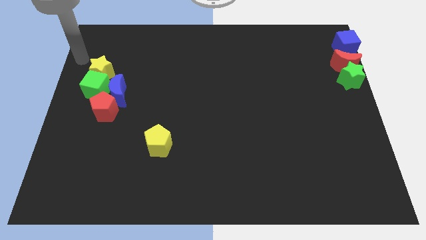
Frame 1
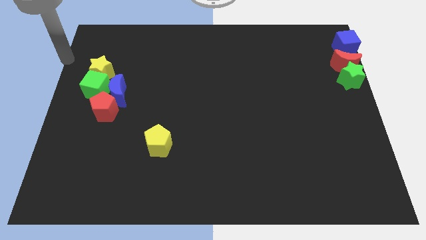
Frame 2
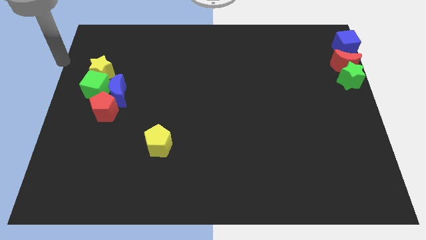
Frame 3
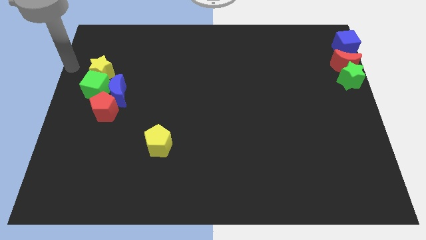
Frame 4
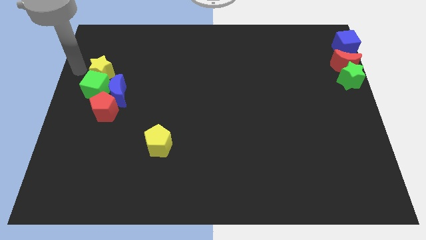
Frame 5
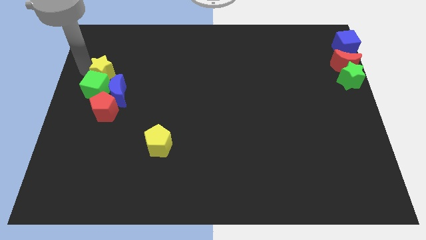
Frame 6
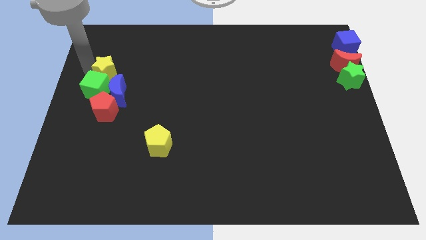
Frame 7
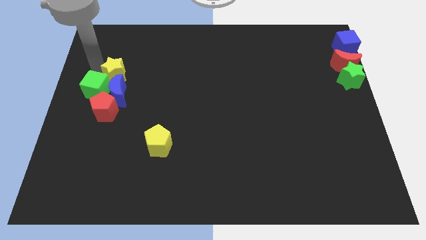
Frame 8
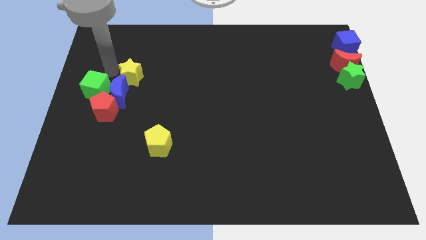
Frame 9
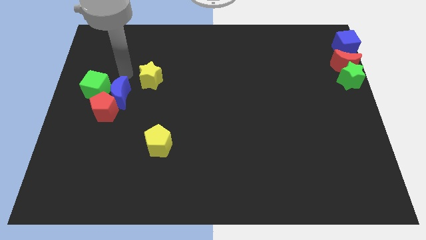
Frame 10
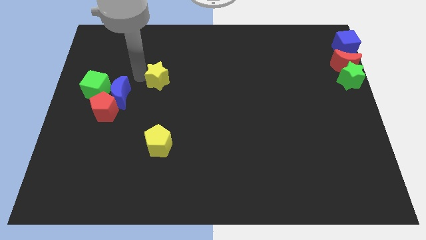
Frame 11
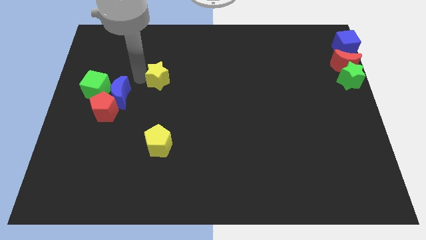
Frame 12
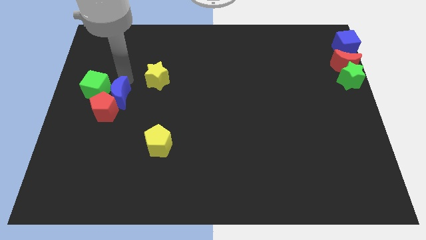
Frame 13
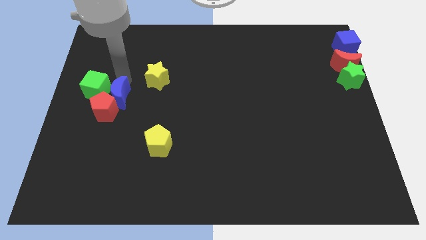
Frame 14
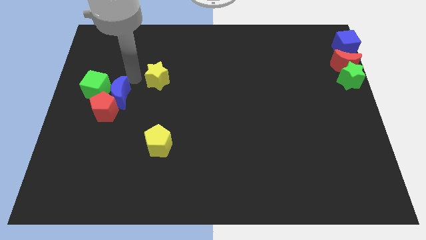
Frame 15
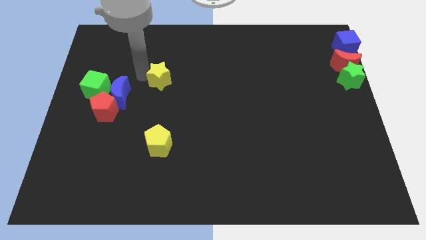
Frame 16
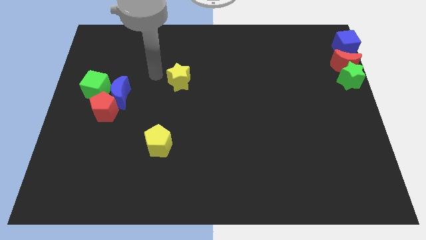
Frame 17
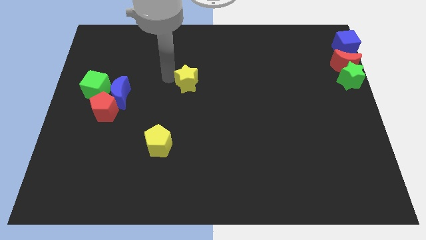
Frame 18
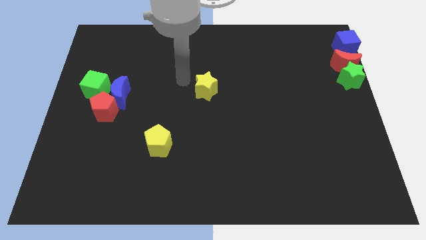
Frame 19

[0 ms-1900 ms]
drag the yellow star towards the center of the board

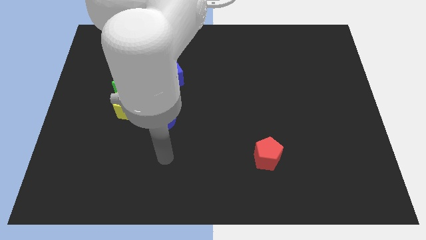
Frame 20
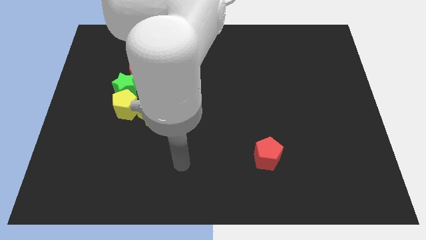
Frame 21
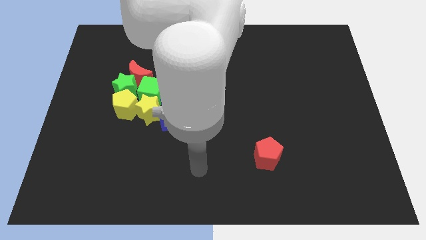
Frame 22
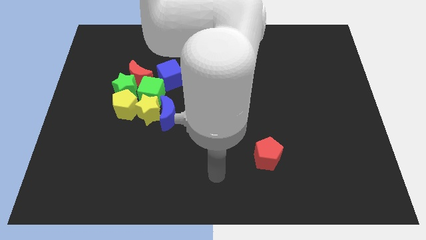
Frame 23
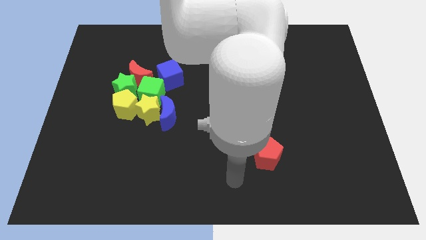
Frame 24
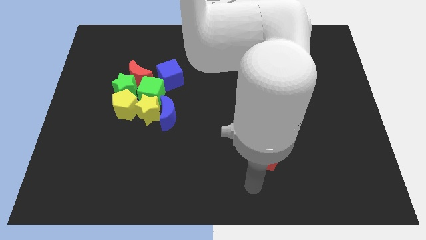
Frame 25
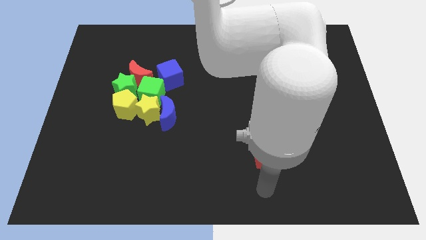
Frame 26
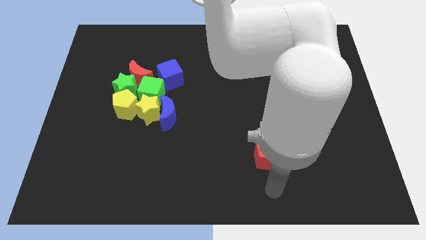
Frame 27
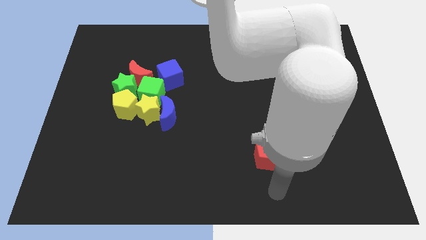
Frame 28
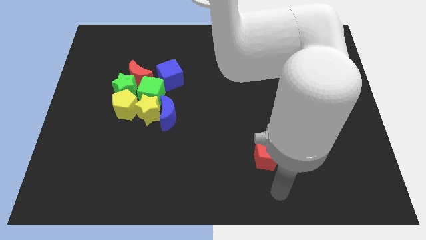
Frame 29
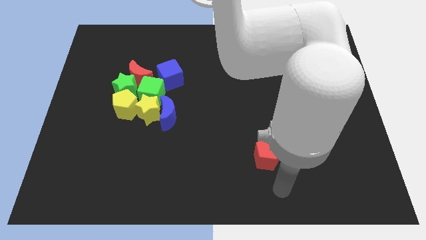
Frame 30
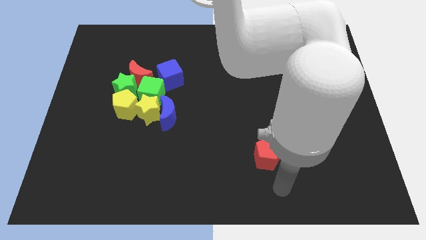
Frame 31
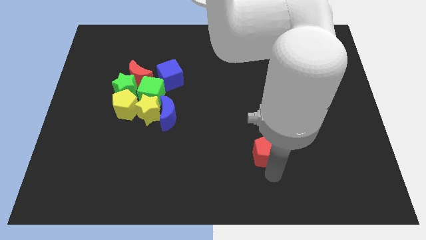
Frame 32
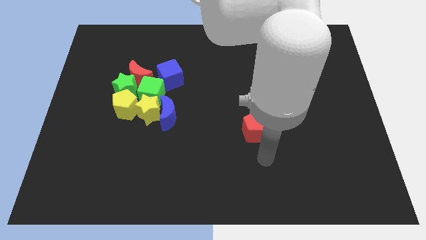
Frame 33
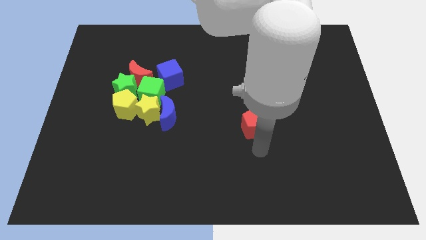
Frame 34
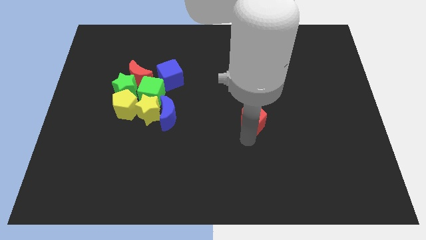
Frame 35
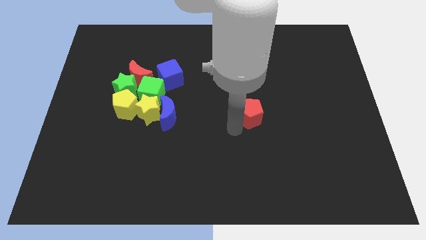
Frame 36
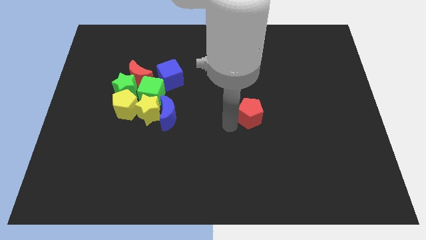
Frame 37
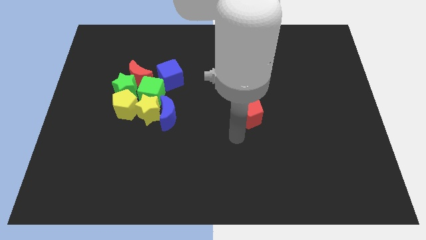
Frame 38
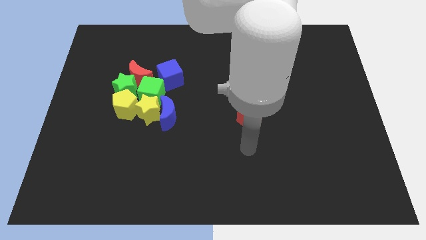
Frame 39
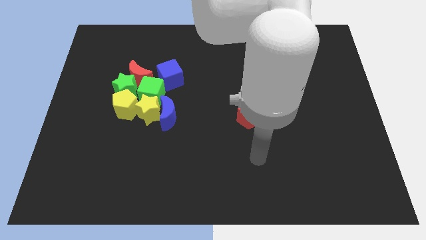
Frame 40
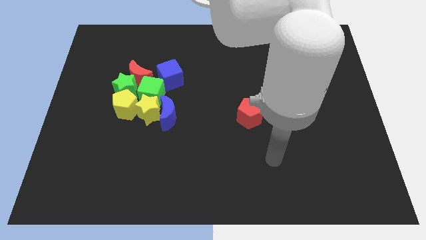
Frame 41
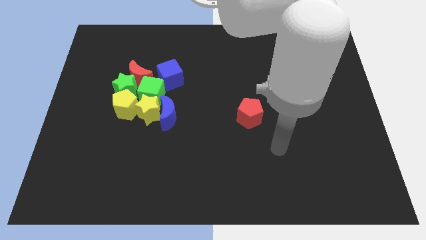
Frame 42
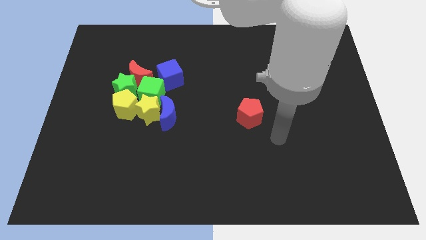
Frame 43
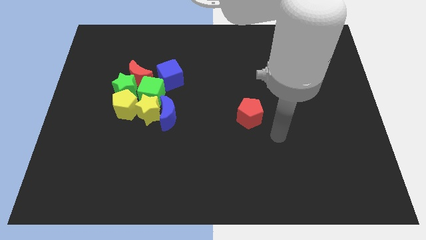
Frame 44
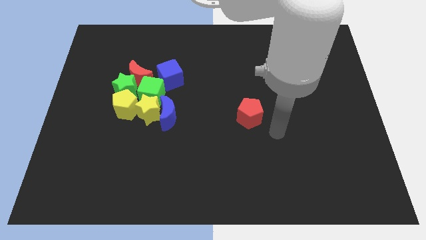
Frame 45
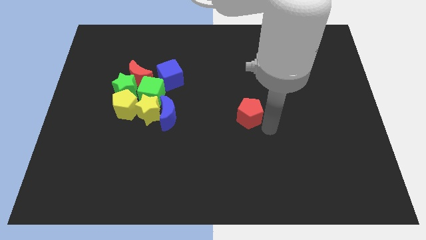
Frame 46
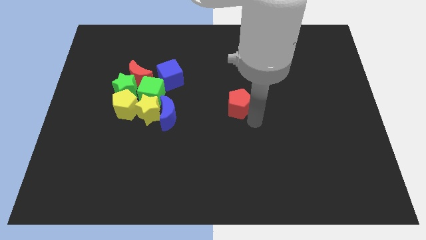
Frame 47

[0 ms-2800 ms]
move the red pentagon to the center of the board

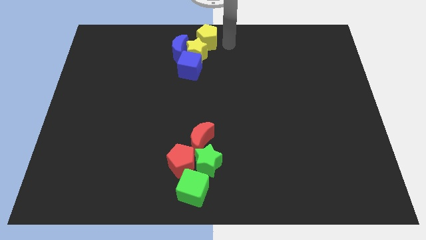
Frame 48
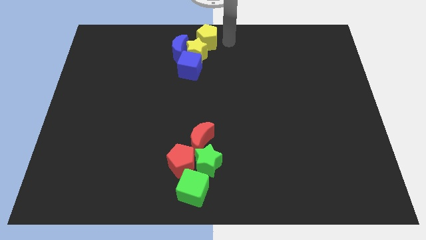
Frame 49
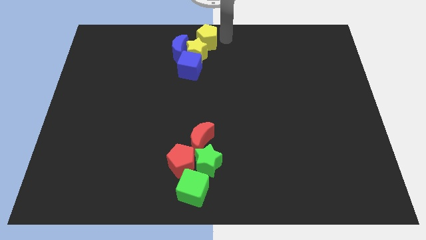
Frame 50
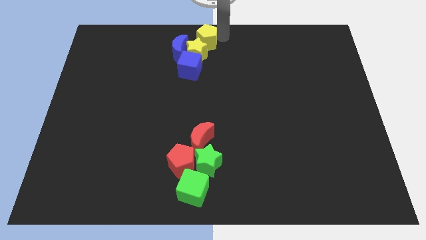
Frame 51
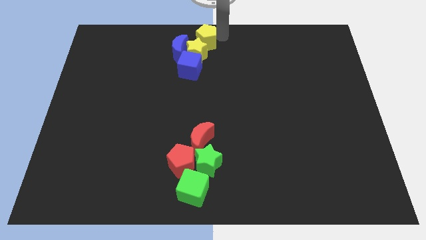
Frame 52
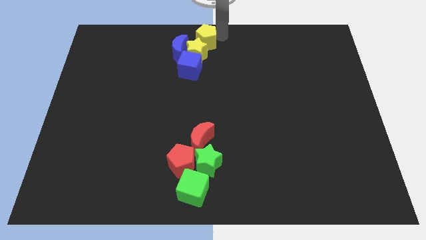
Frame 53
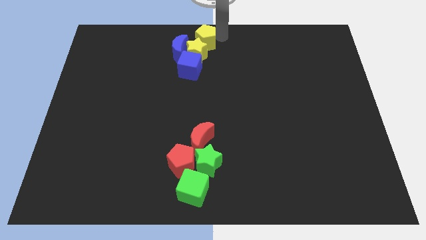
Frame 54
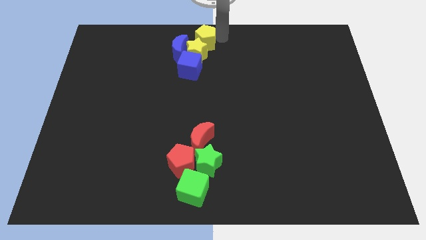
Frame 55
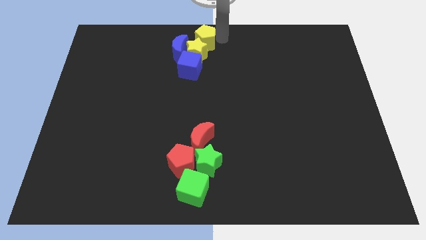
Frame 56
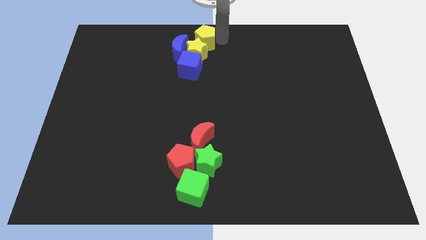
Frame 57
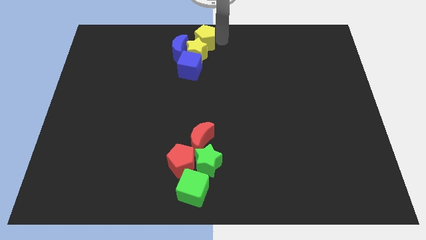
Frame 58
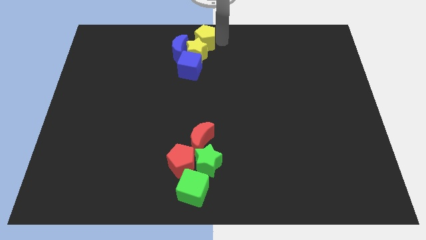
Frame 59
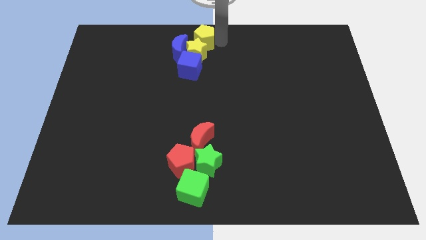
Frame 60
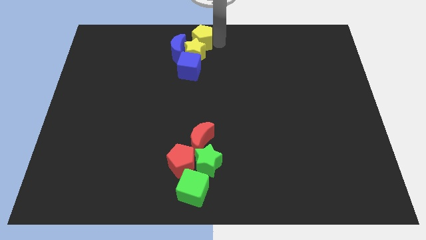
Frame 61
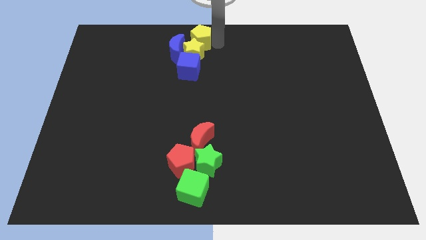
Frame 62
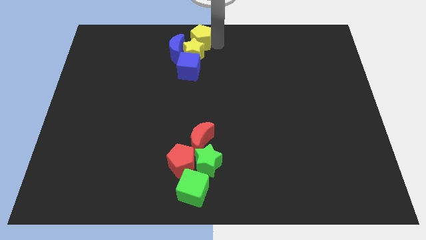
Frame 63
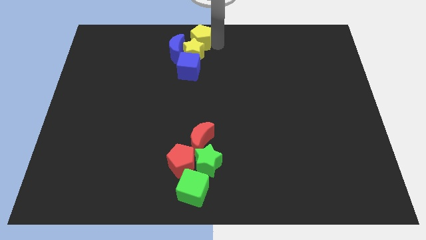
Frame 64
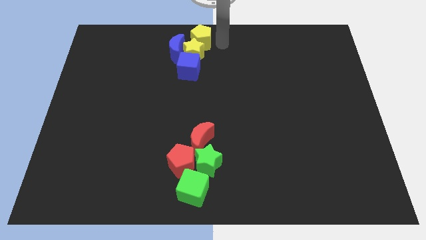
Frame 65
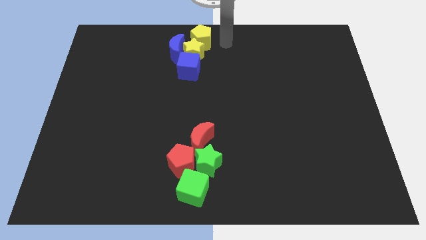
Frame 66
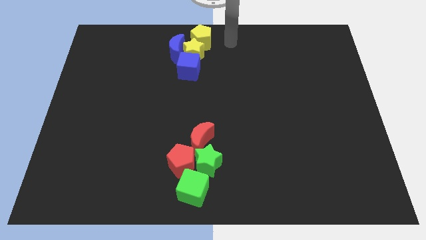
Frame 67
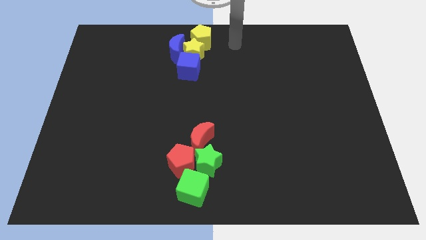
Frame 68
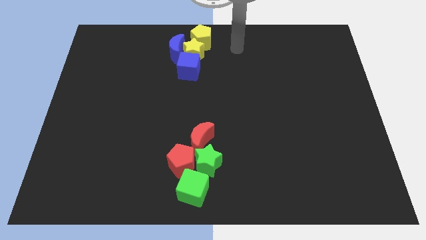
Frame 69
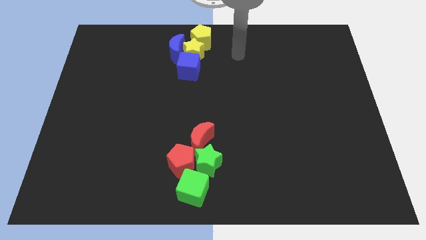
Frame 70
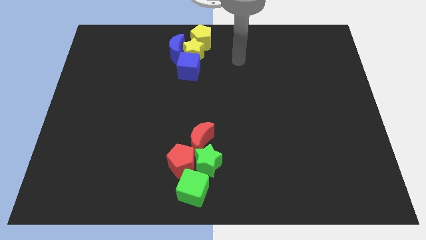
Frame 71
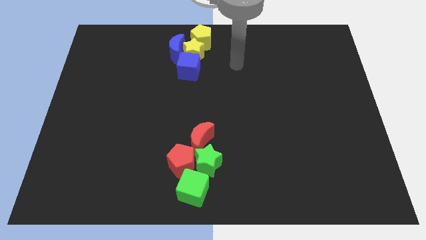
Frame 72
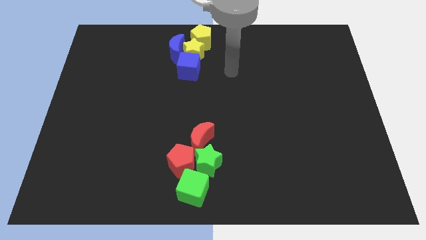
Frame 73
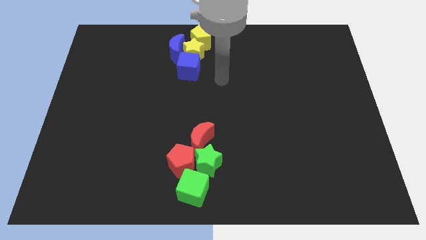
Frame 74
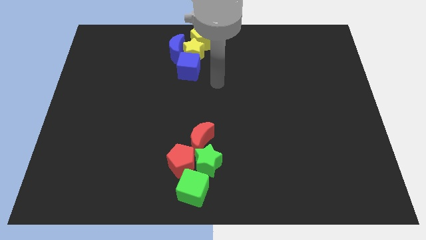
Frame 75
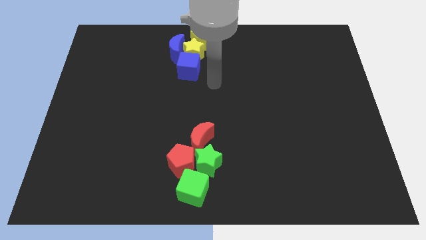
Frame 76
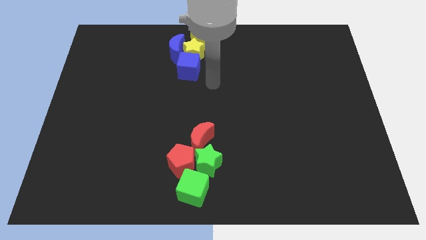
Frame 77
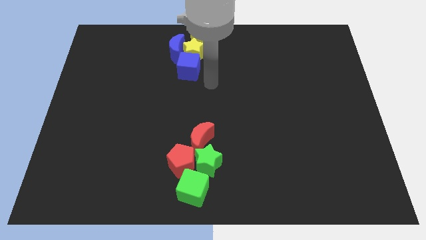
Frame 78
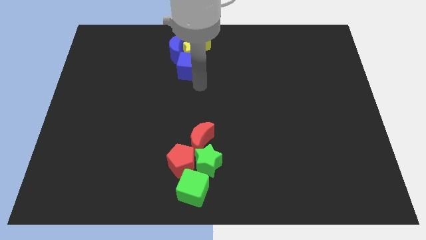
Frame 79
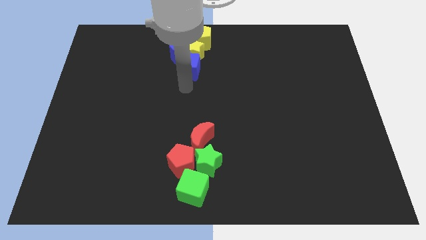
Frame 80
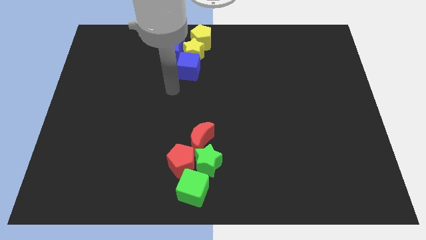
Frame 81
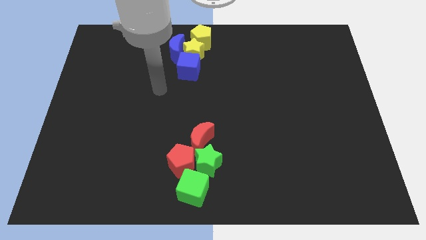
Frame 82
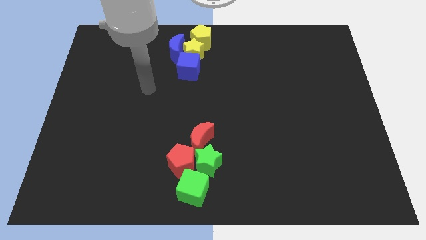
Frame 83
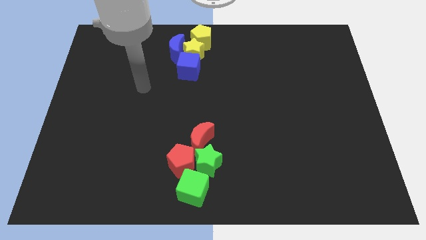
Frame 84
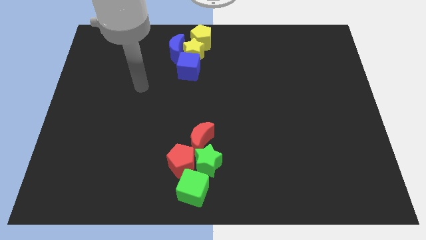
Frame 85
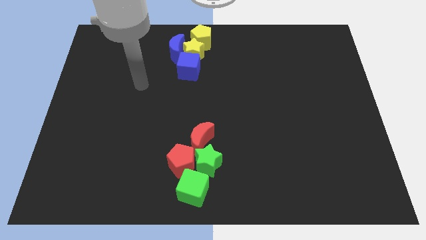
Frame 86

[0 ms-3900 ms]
slightly push the yellow pentagon into the yellow star

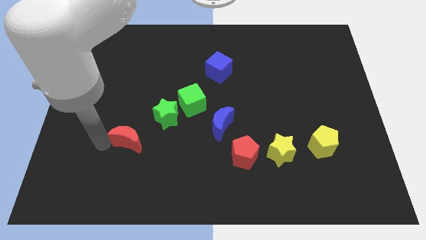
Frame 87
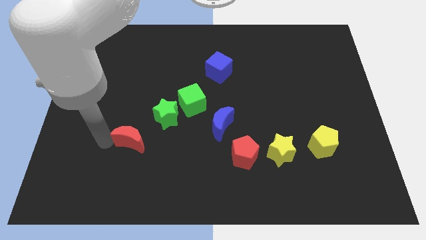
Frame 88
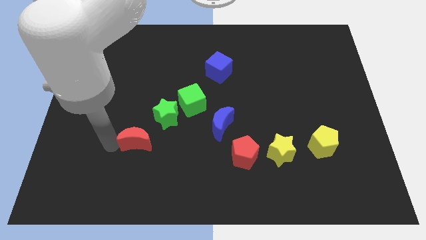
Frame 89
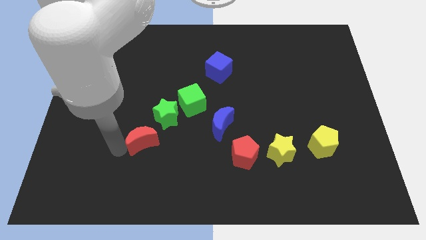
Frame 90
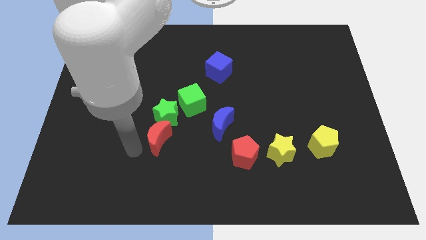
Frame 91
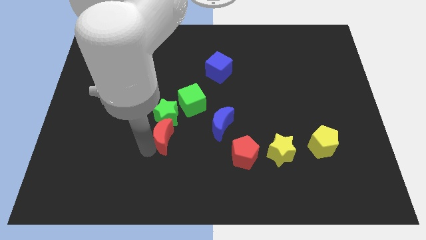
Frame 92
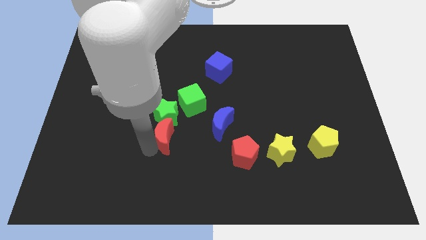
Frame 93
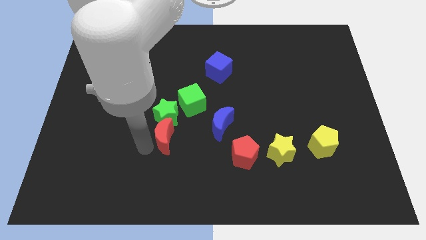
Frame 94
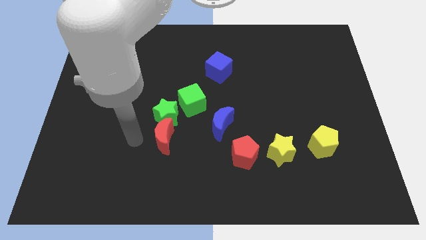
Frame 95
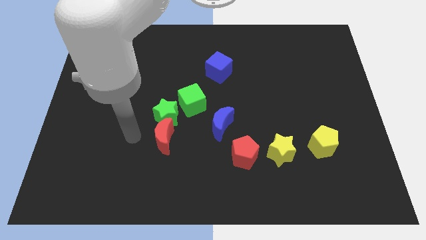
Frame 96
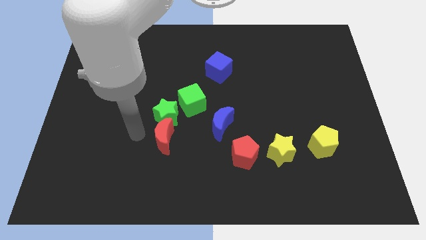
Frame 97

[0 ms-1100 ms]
place red moon to the bottom of green star
